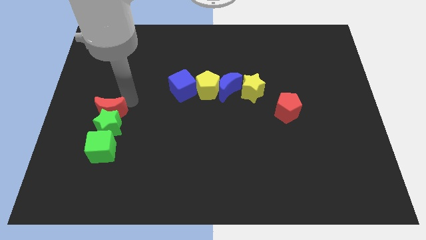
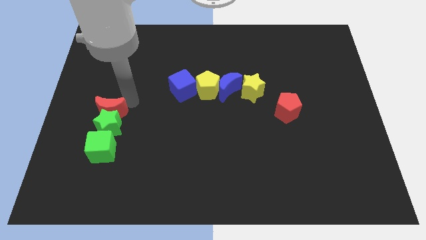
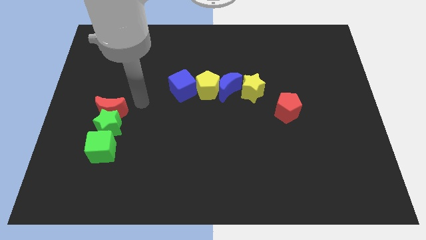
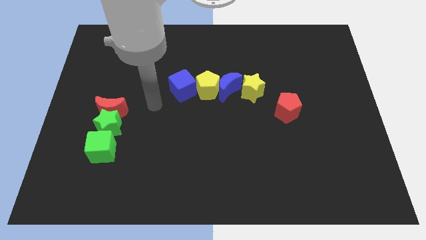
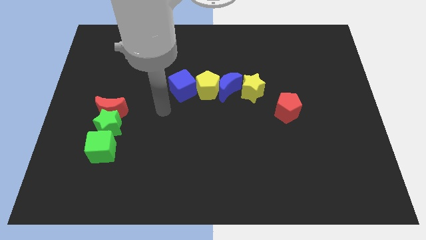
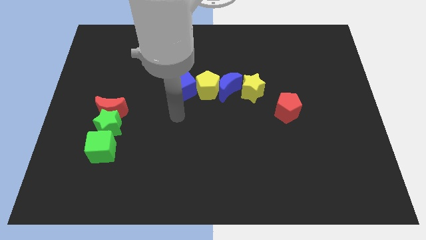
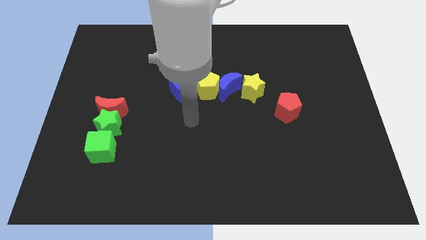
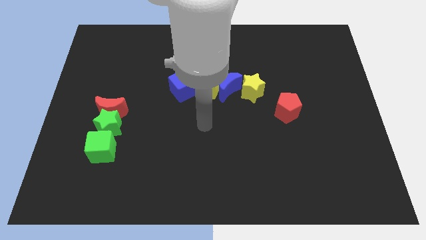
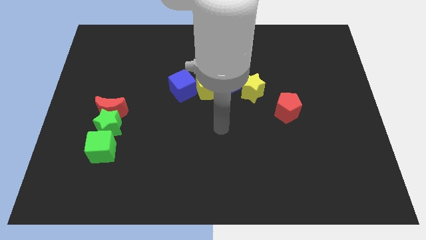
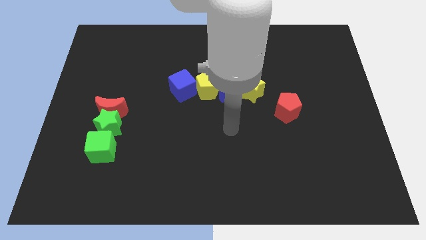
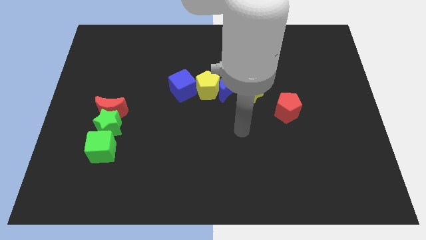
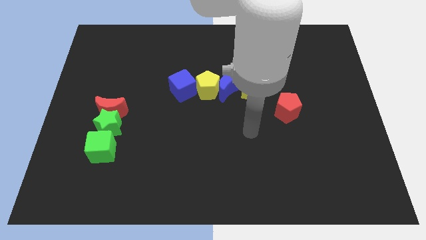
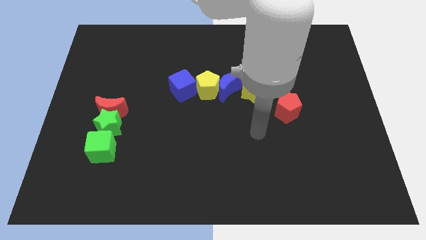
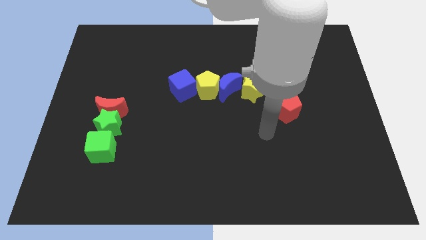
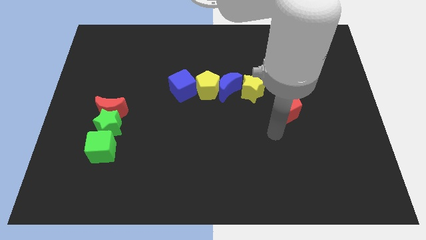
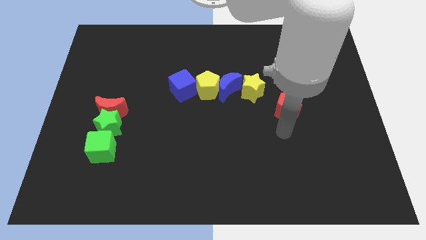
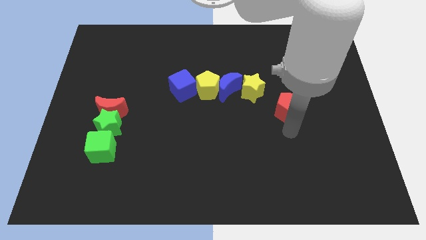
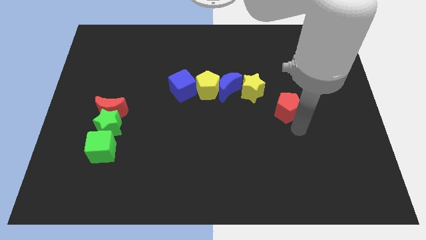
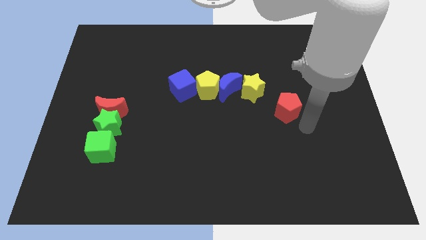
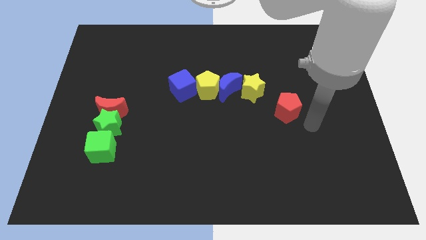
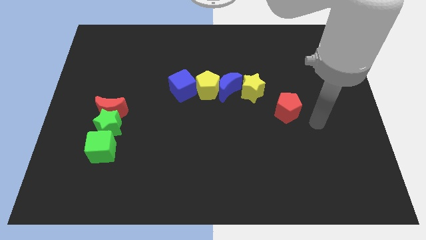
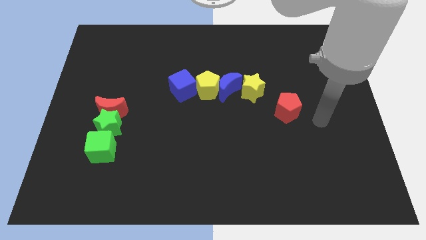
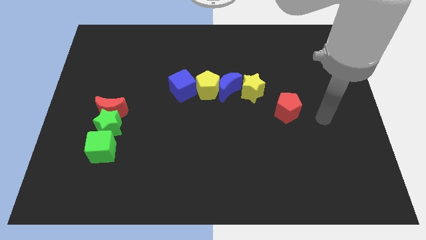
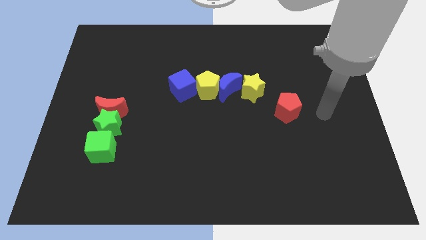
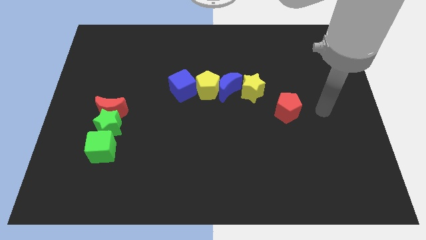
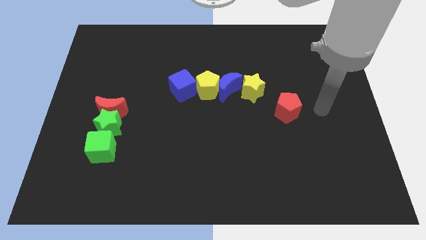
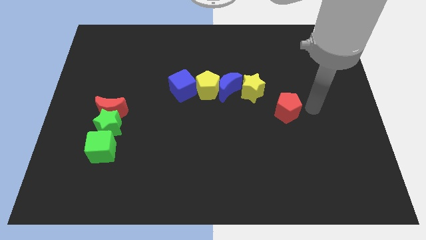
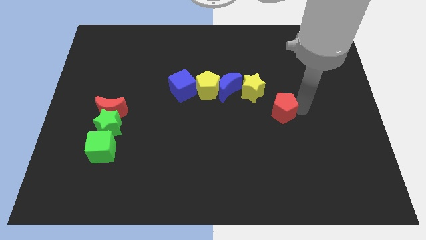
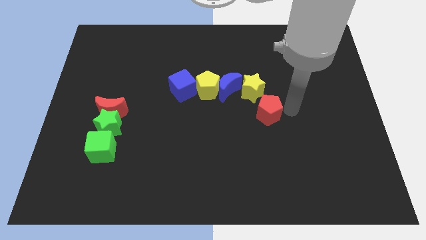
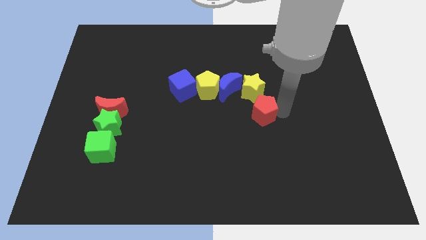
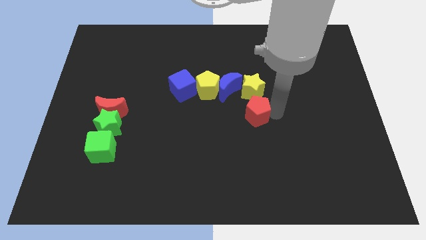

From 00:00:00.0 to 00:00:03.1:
push the red pentagon towards the bottom right of the yellow star

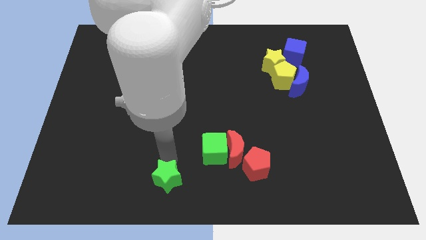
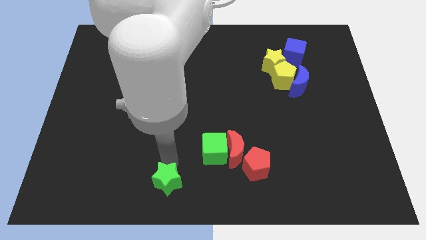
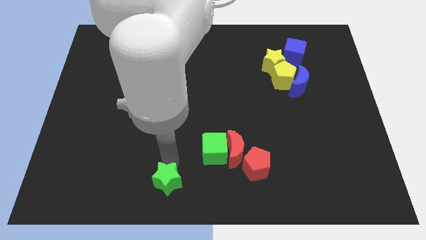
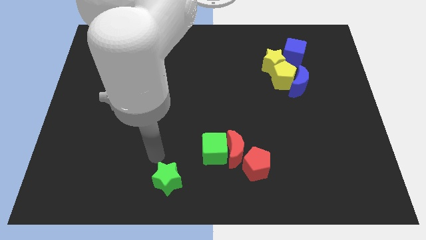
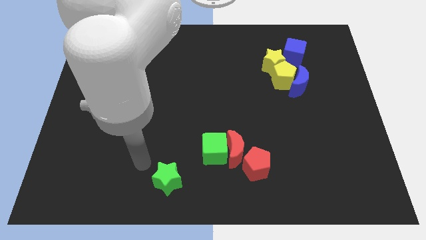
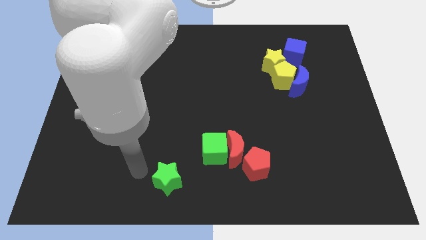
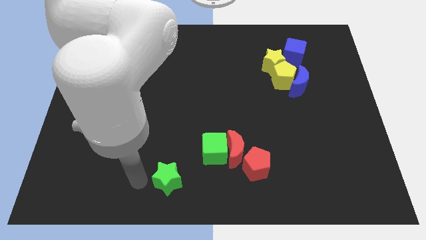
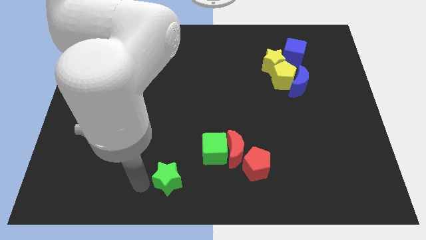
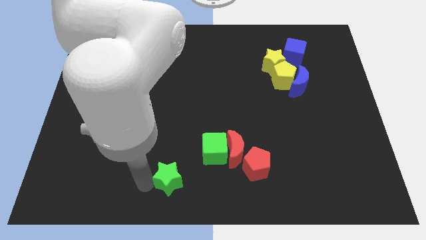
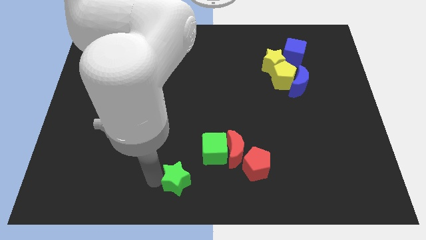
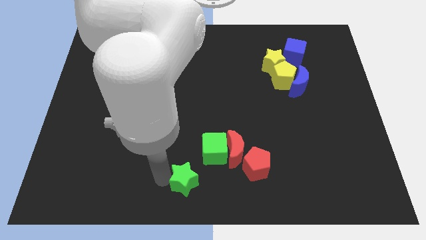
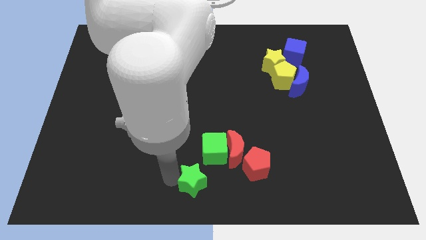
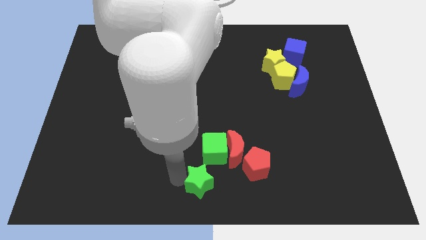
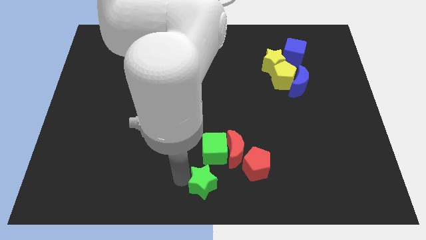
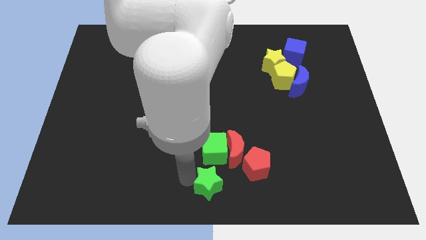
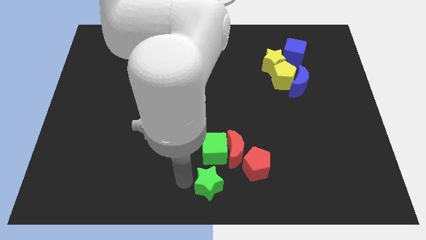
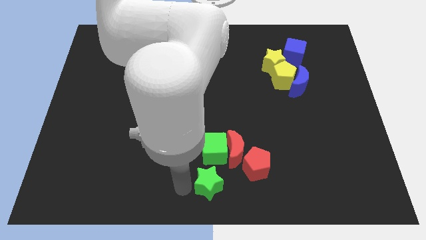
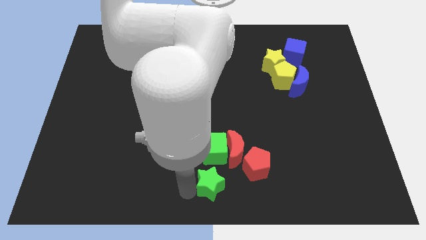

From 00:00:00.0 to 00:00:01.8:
move the green star to the bottom side of the green cube

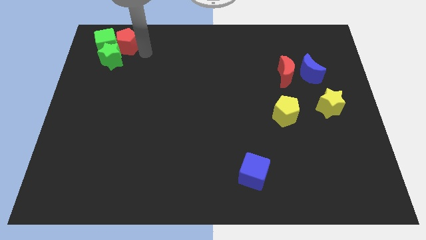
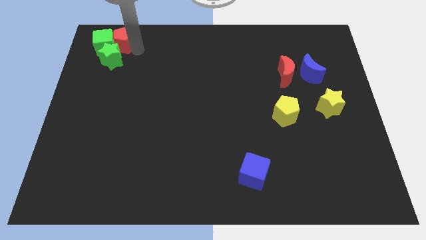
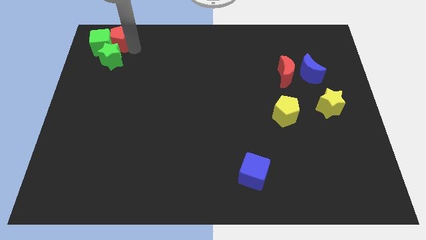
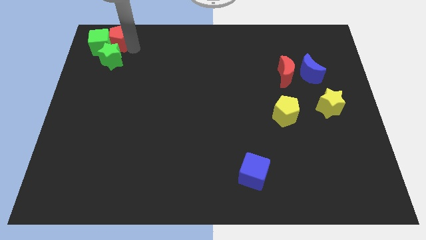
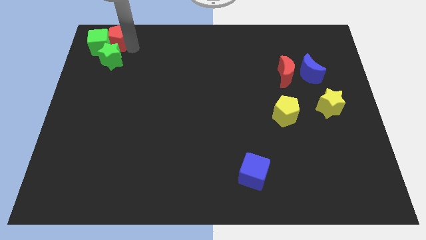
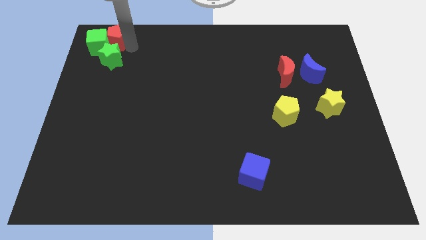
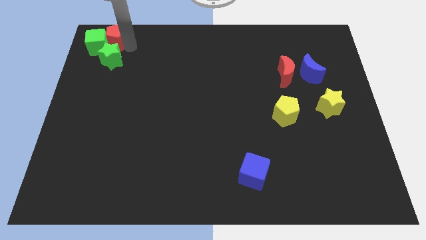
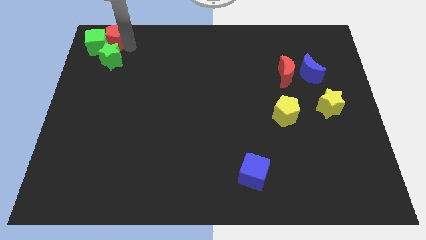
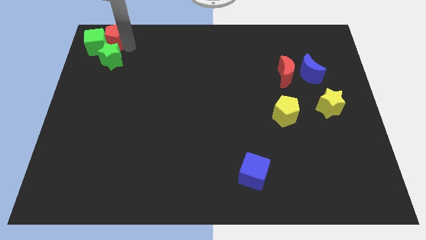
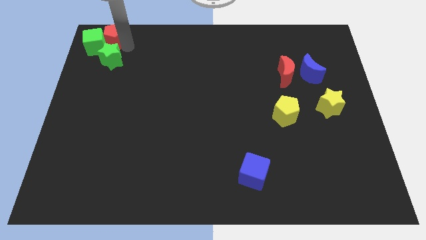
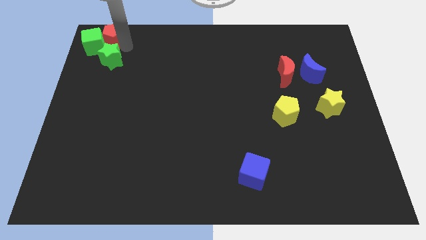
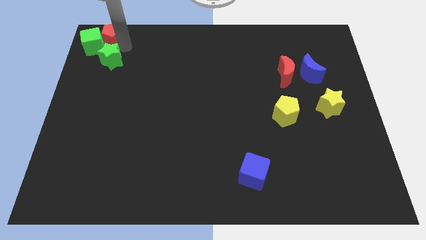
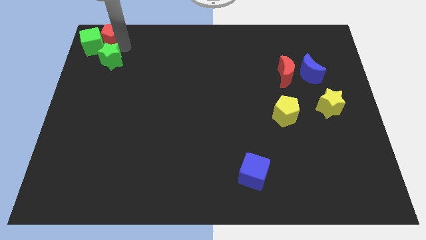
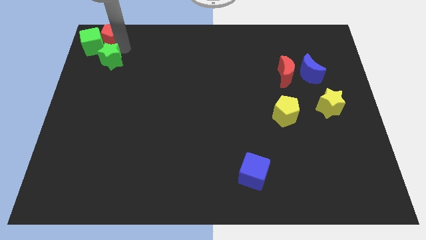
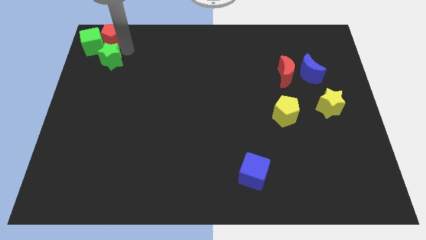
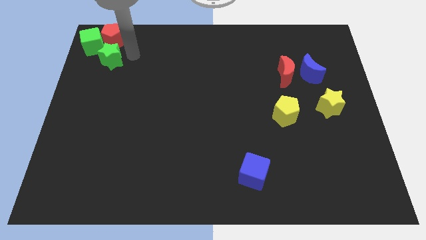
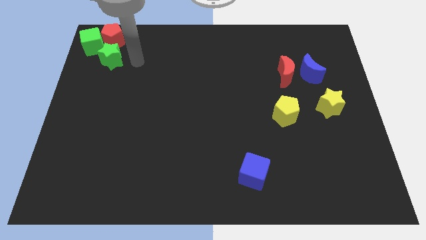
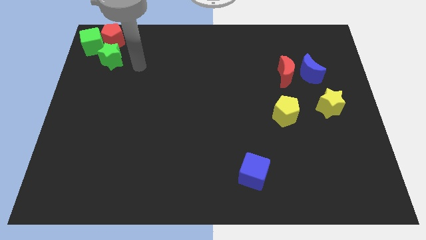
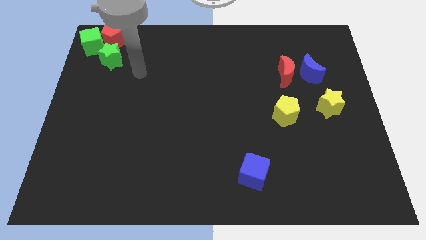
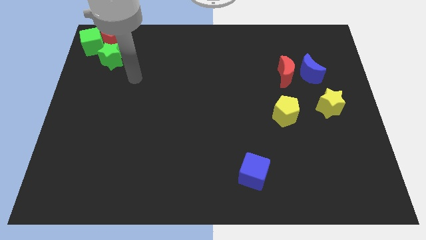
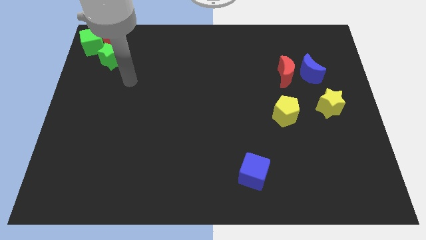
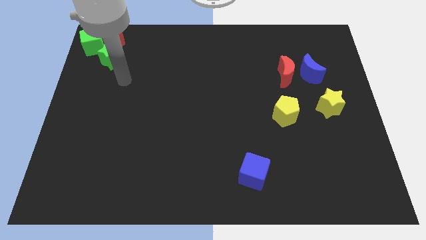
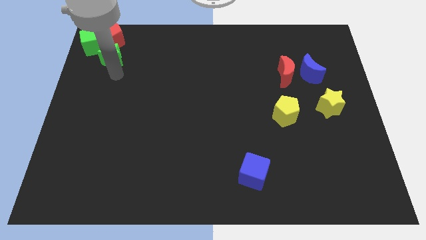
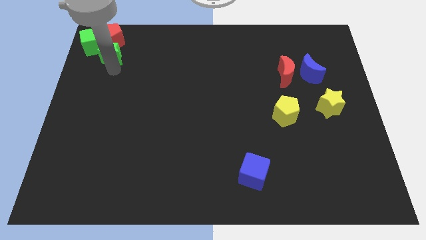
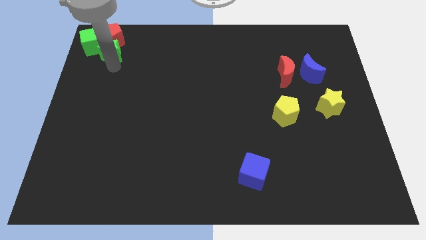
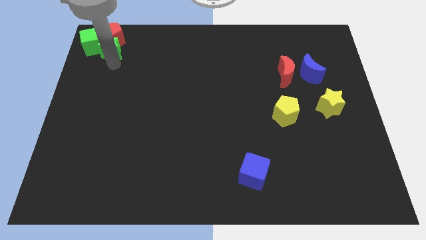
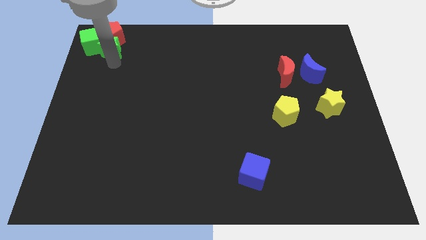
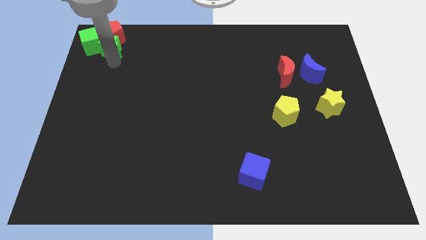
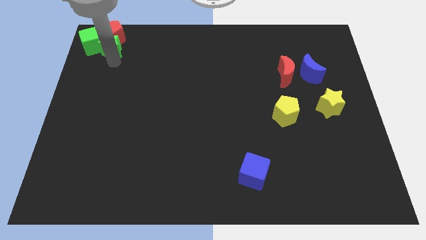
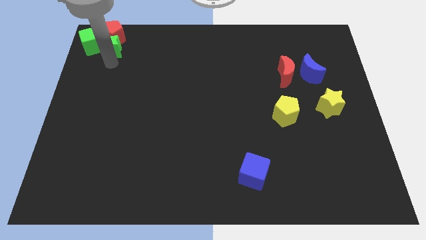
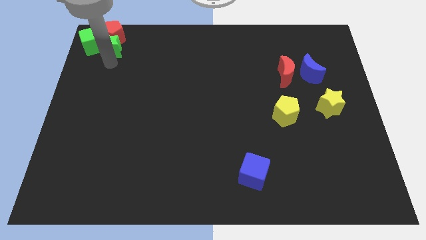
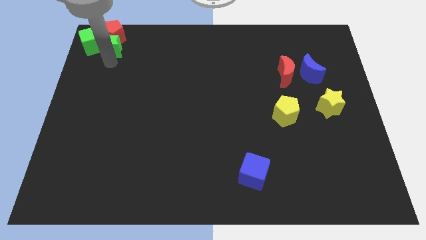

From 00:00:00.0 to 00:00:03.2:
push the green blocks and the red pentagon to the top left

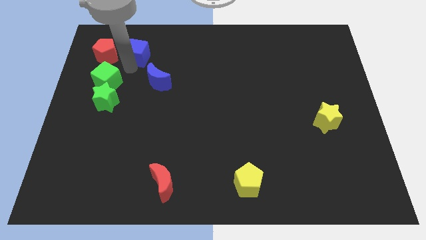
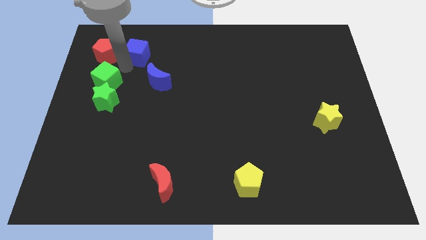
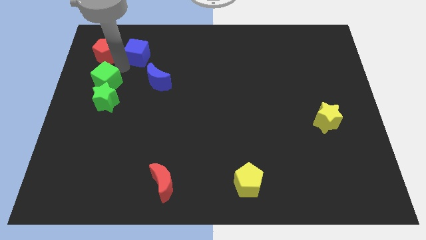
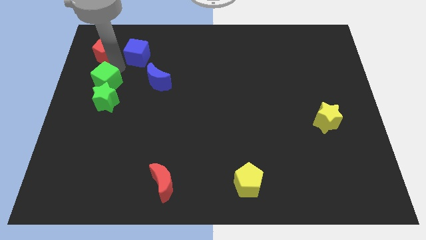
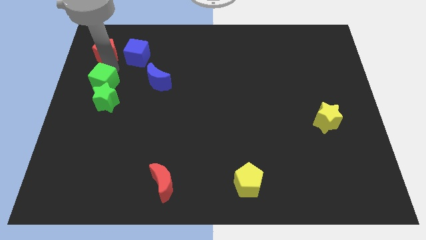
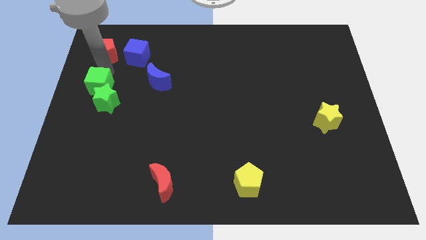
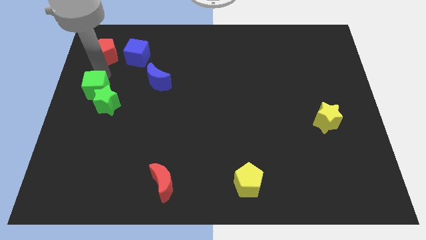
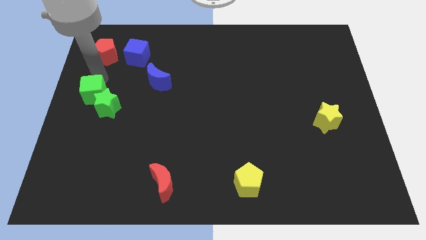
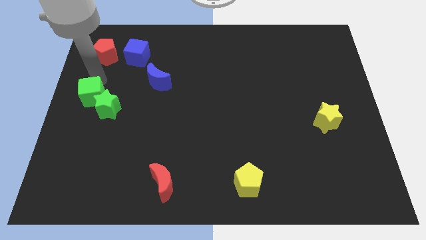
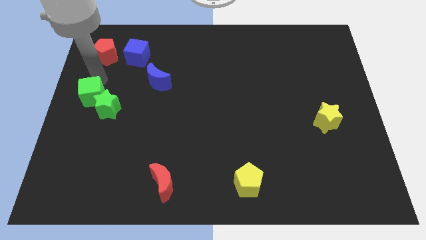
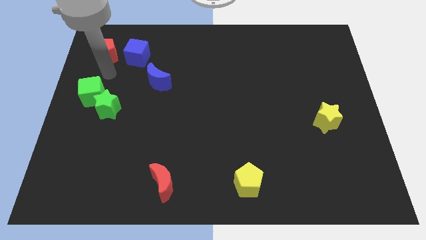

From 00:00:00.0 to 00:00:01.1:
push the green cube along with green star slightly toward the bottom of the board

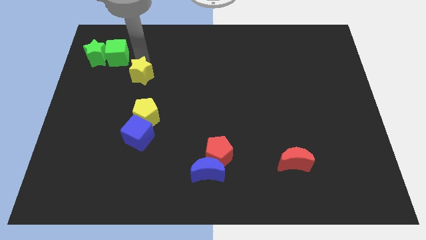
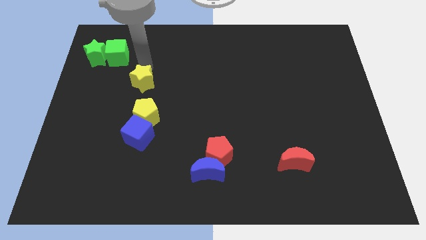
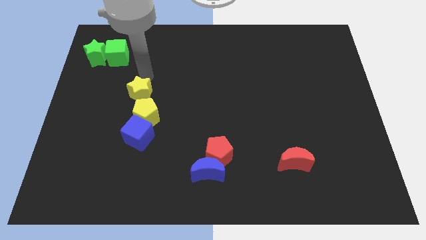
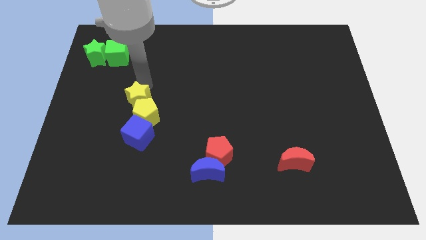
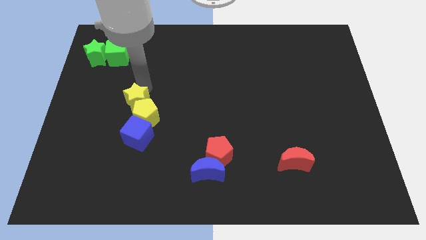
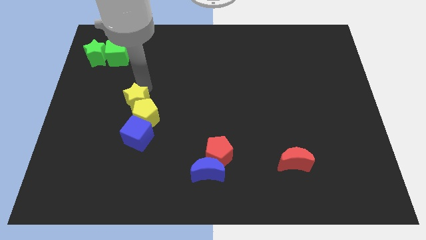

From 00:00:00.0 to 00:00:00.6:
push the yellow star to the top of the yellow pentagon
